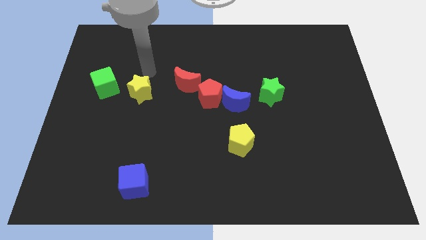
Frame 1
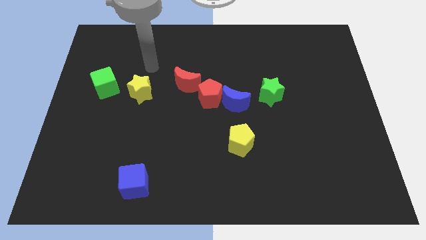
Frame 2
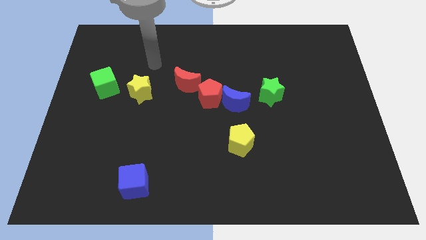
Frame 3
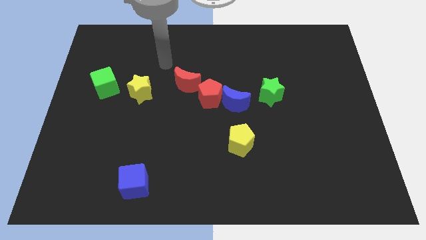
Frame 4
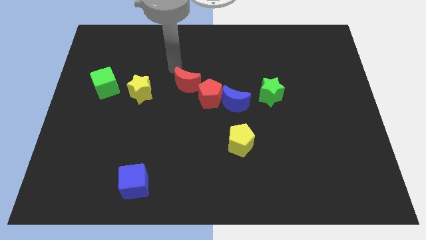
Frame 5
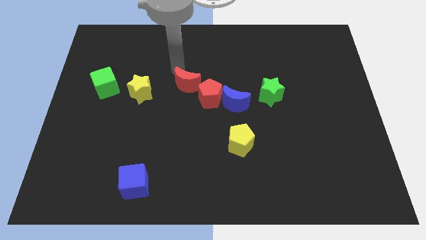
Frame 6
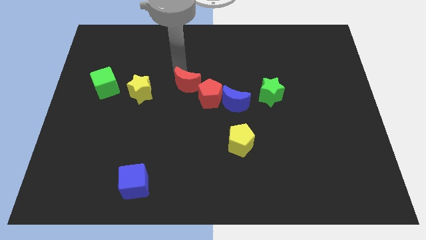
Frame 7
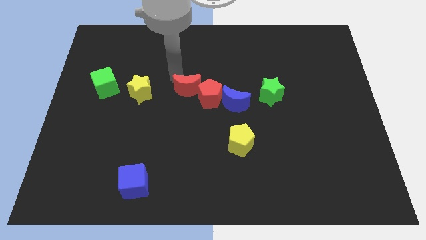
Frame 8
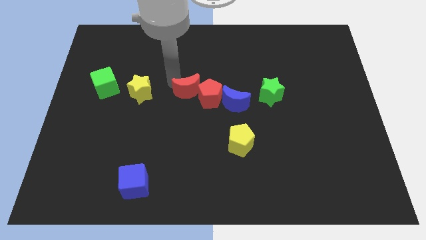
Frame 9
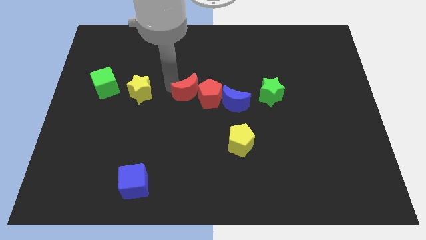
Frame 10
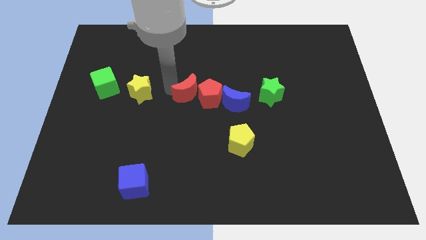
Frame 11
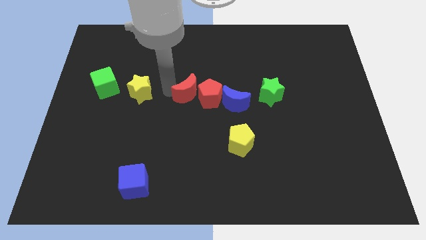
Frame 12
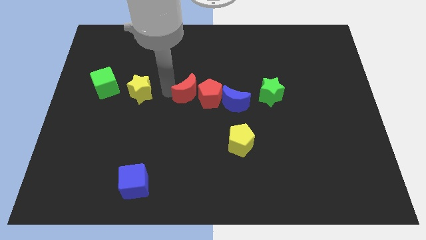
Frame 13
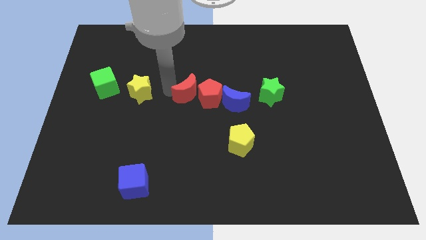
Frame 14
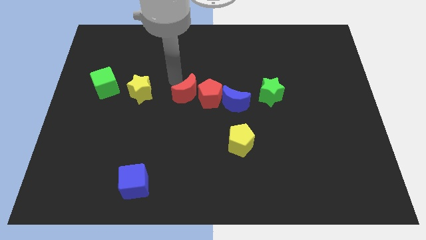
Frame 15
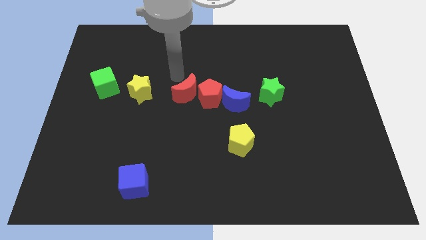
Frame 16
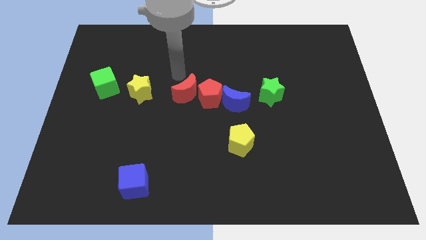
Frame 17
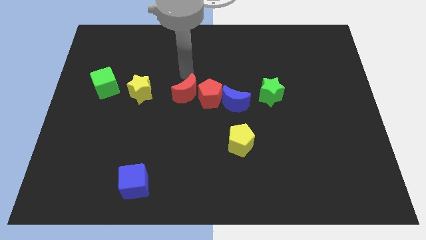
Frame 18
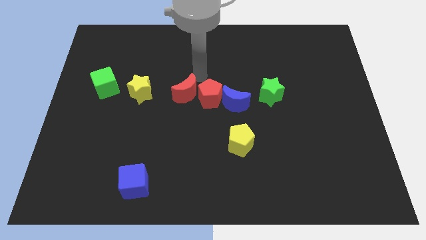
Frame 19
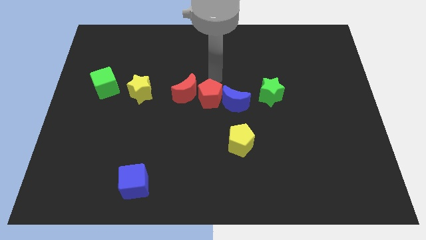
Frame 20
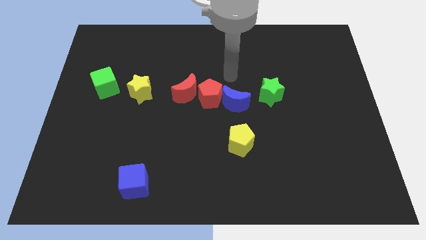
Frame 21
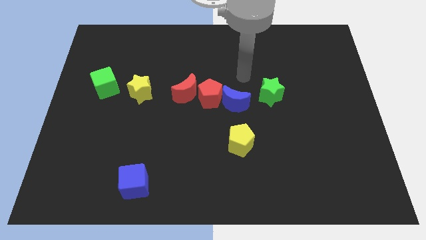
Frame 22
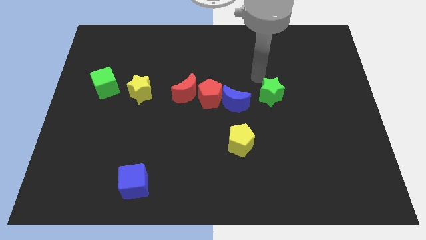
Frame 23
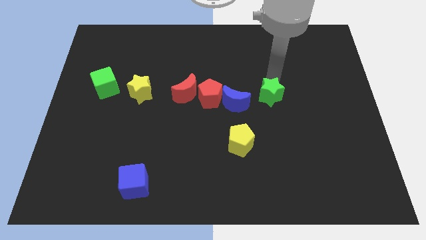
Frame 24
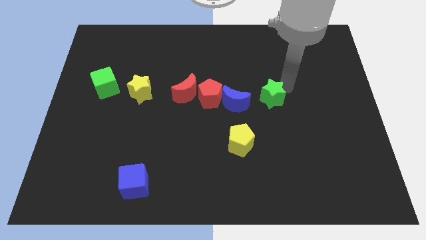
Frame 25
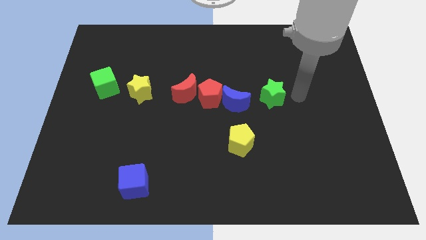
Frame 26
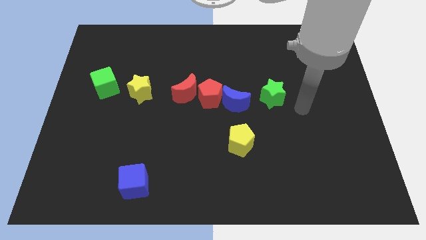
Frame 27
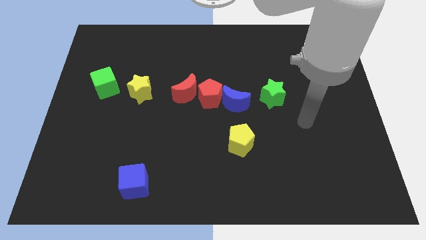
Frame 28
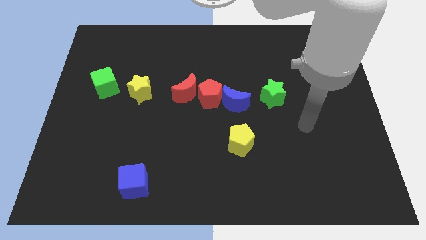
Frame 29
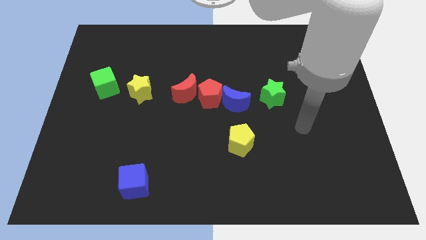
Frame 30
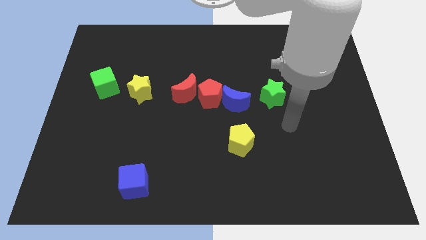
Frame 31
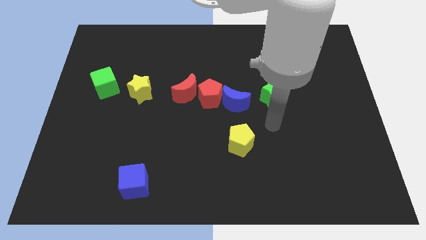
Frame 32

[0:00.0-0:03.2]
adjust the red moon and green star to form a vertical line with other blocks

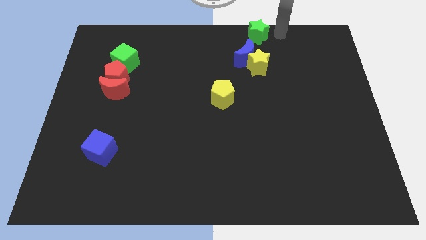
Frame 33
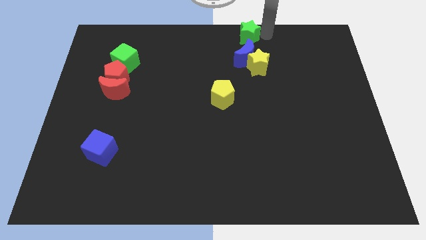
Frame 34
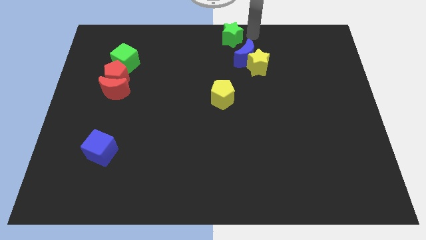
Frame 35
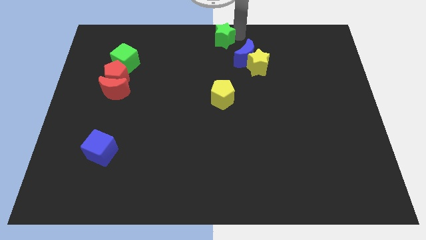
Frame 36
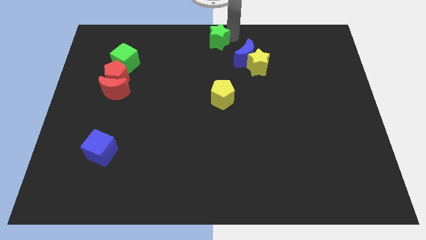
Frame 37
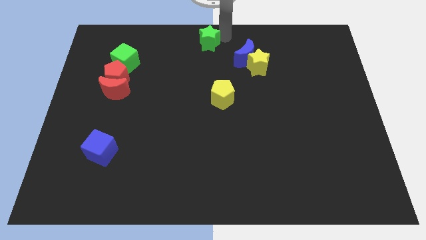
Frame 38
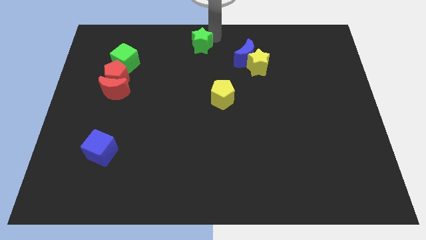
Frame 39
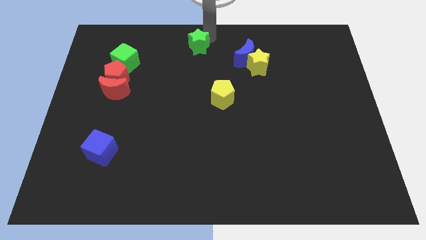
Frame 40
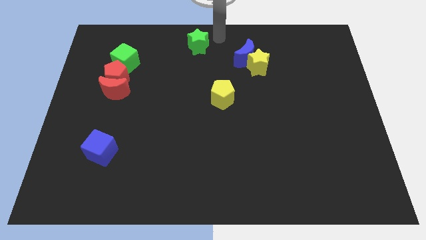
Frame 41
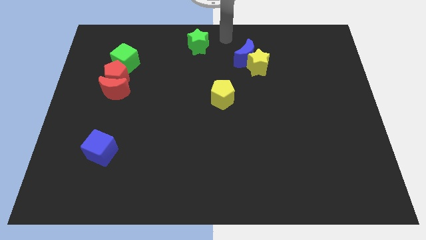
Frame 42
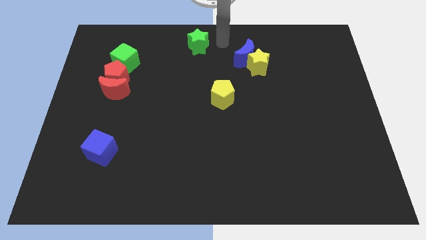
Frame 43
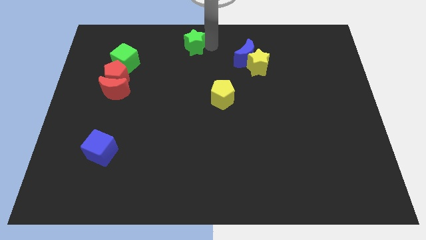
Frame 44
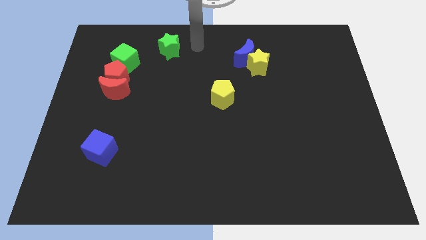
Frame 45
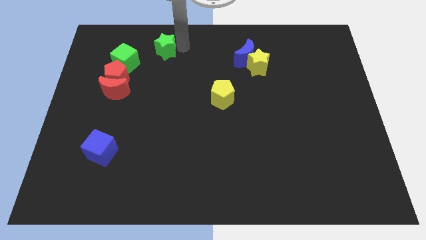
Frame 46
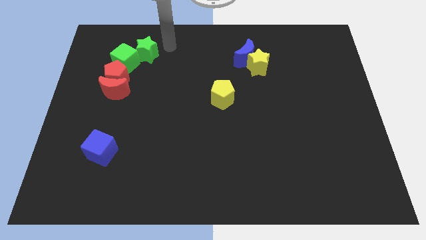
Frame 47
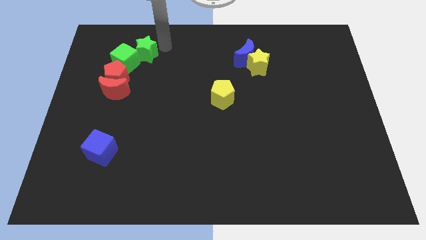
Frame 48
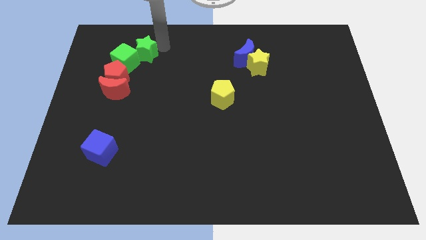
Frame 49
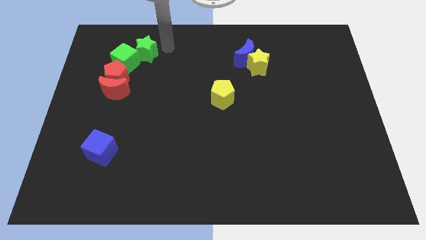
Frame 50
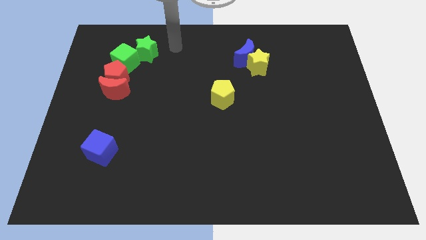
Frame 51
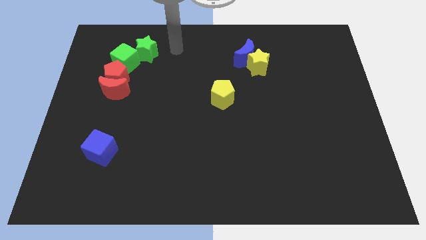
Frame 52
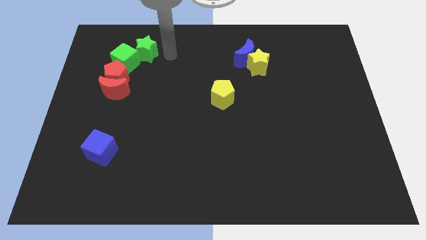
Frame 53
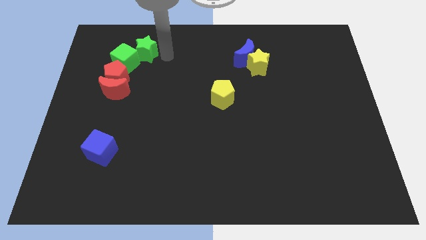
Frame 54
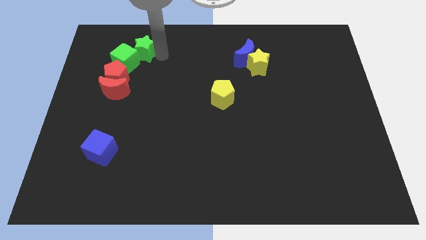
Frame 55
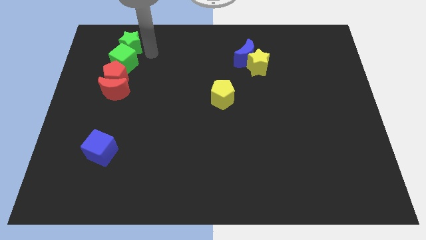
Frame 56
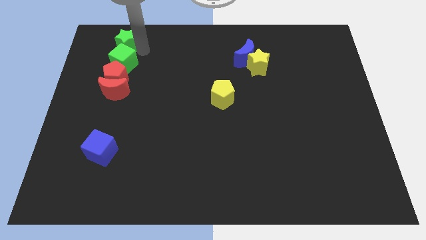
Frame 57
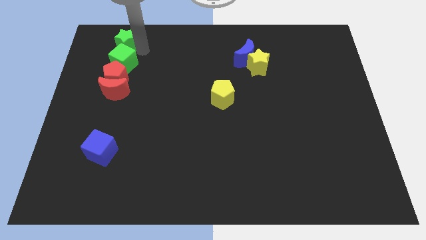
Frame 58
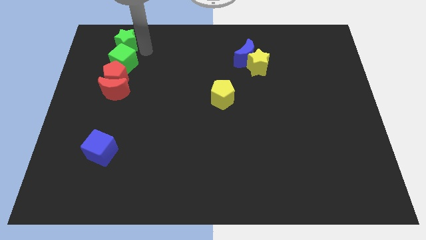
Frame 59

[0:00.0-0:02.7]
move the green star to the top of the green cube

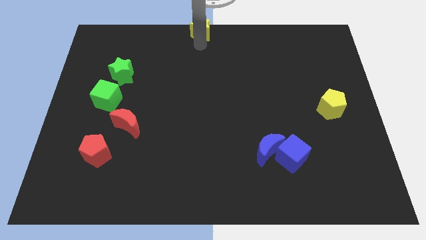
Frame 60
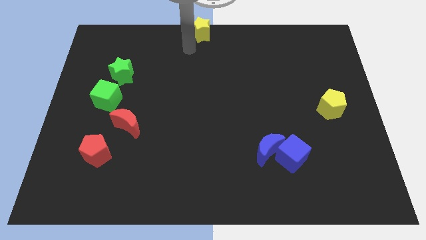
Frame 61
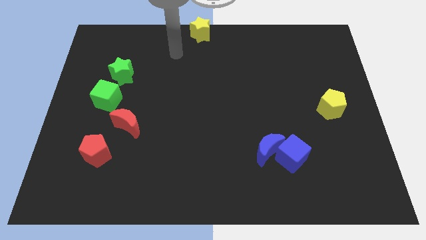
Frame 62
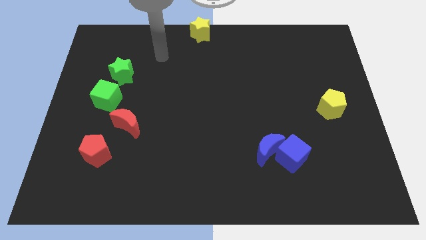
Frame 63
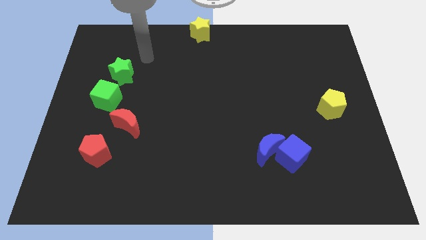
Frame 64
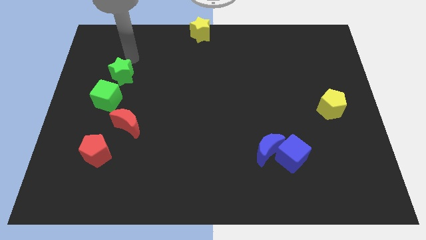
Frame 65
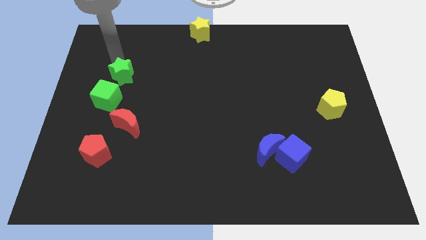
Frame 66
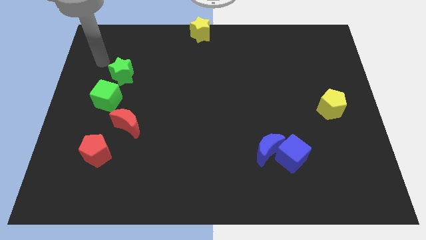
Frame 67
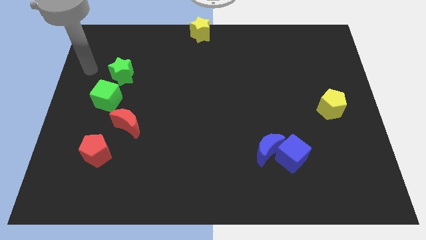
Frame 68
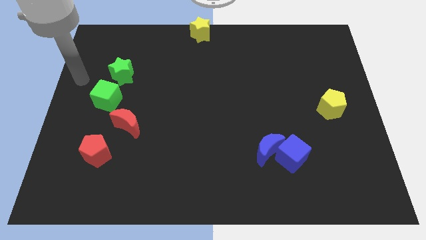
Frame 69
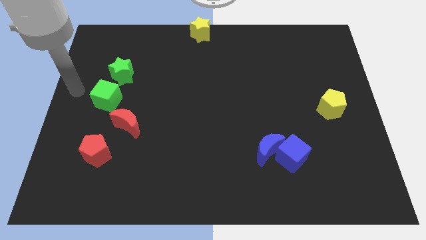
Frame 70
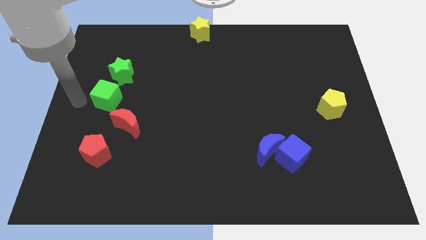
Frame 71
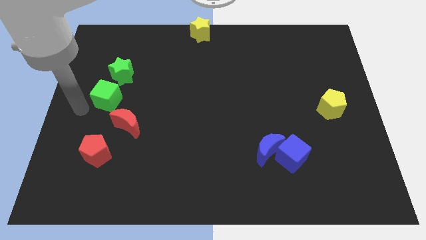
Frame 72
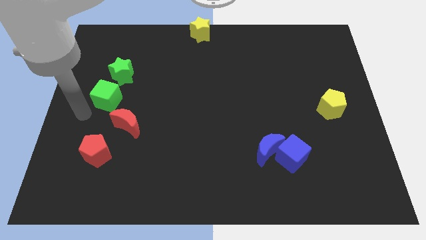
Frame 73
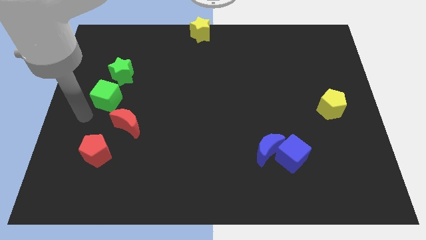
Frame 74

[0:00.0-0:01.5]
place the arm under green cube

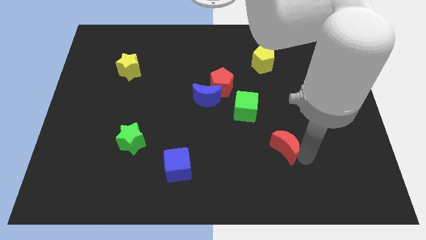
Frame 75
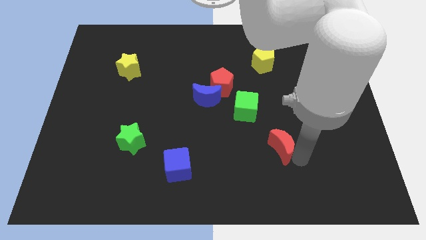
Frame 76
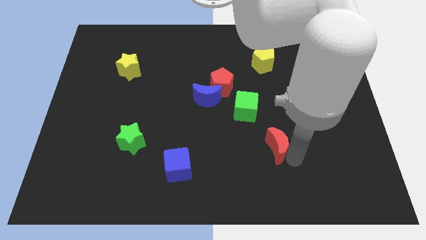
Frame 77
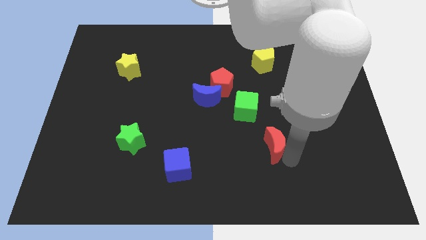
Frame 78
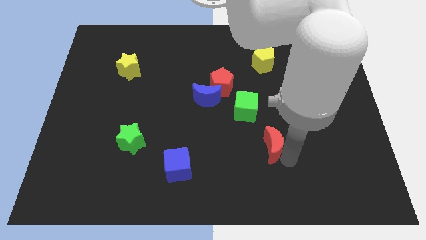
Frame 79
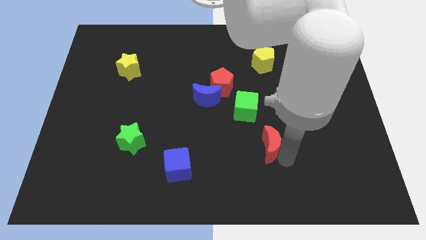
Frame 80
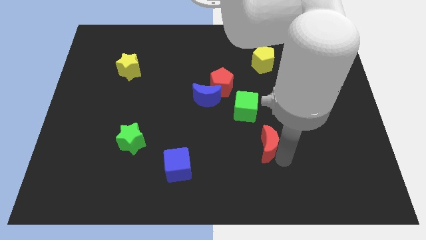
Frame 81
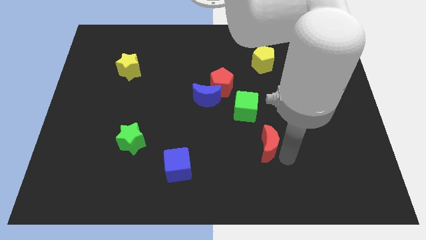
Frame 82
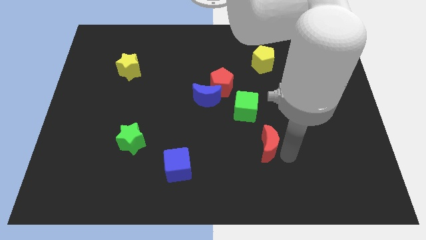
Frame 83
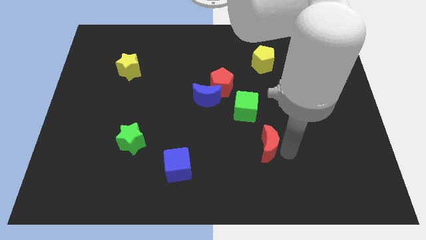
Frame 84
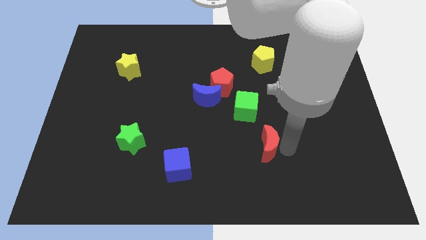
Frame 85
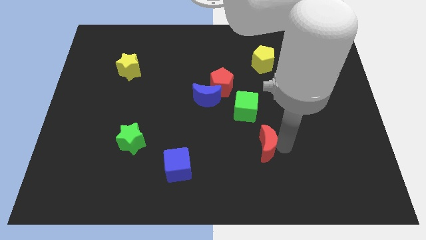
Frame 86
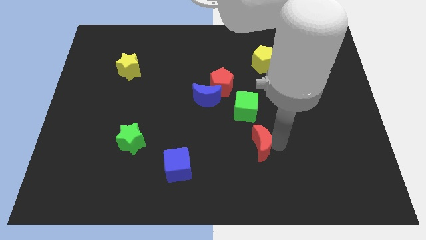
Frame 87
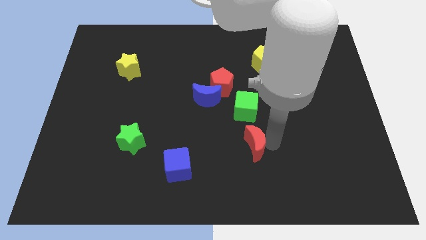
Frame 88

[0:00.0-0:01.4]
put the red crescent below the green cube

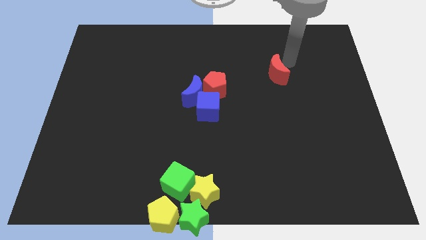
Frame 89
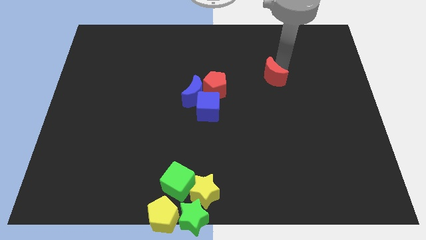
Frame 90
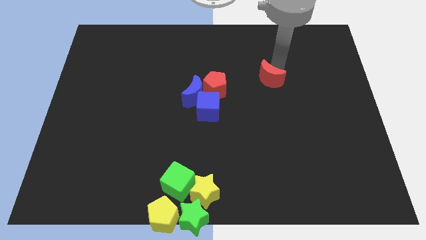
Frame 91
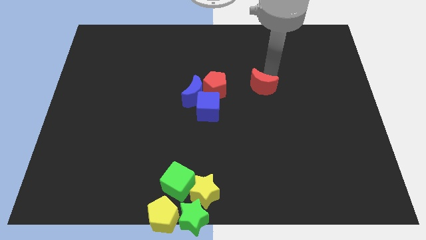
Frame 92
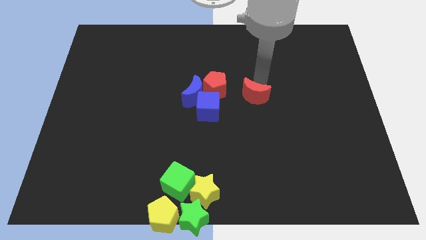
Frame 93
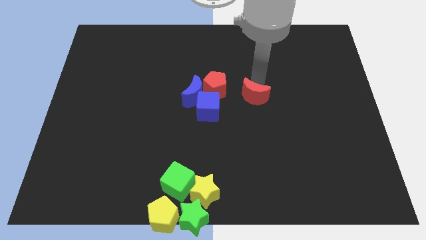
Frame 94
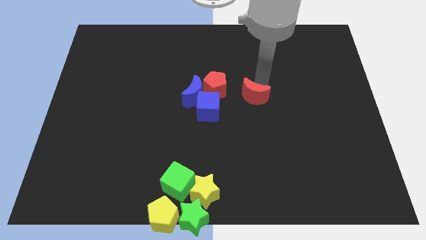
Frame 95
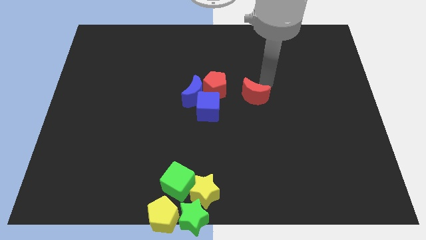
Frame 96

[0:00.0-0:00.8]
move the red crescent to the right of the red pentagon
